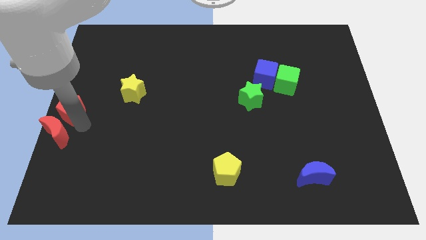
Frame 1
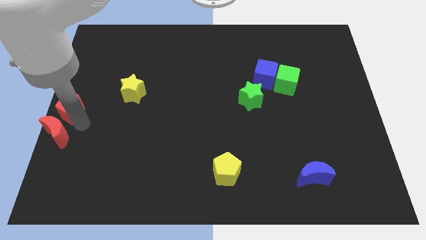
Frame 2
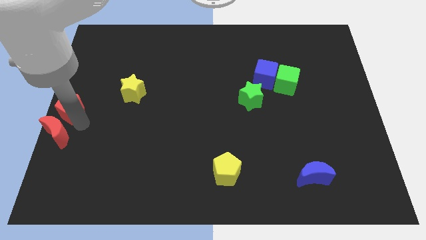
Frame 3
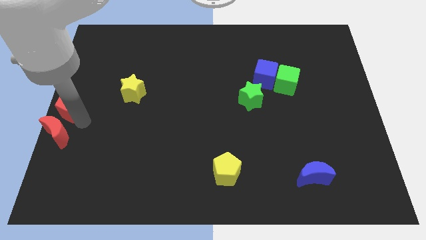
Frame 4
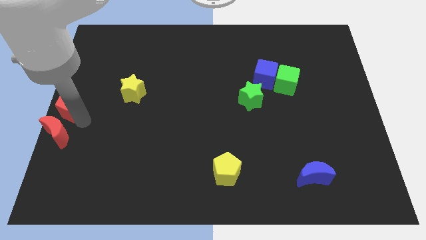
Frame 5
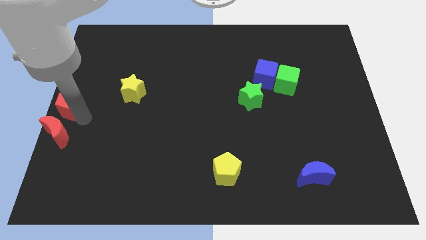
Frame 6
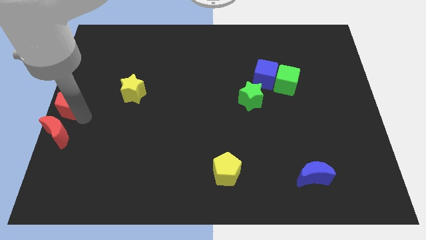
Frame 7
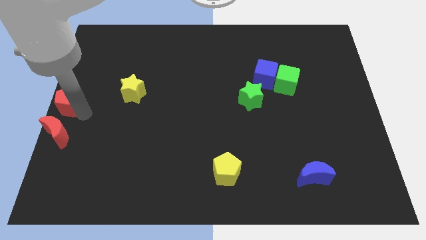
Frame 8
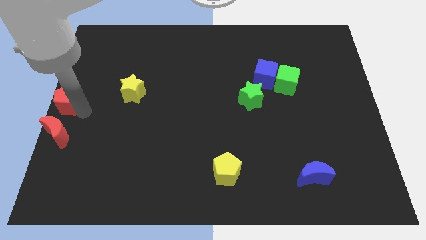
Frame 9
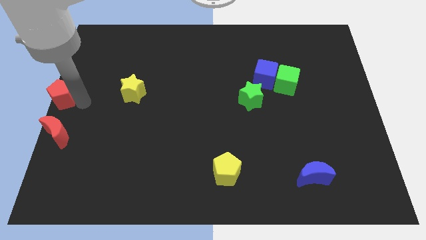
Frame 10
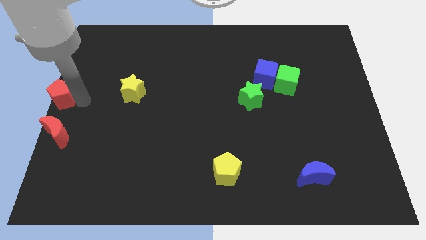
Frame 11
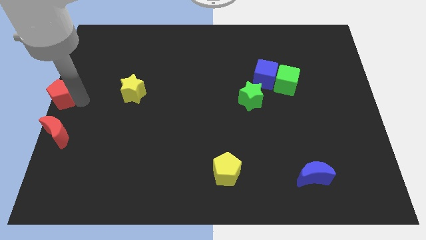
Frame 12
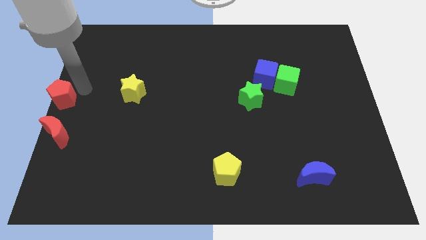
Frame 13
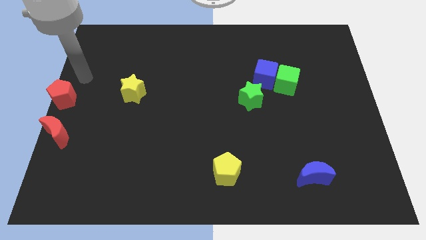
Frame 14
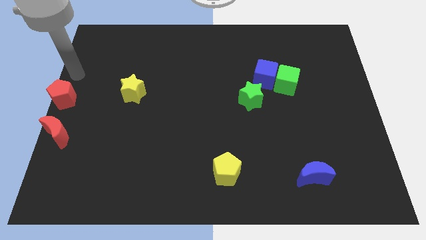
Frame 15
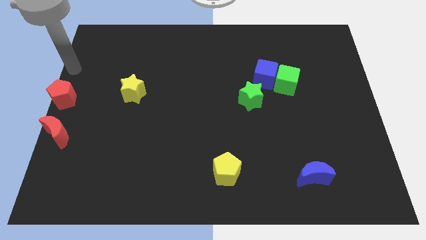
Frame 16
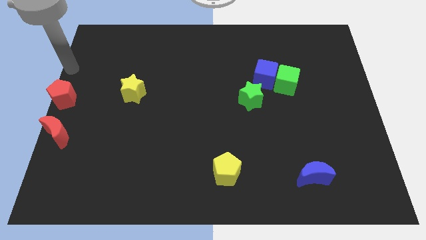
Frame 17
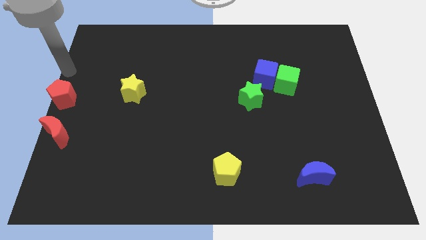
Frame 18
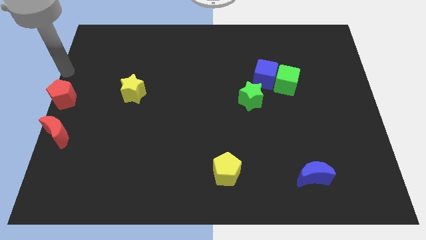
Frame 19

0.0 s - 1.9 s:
move the red pentagon to the left center of the board

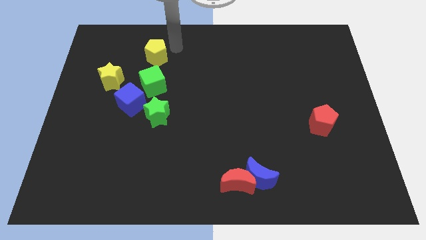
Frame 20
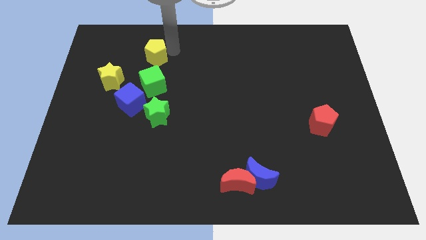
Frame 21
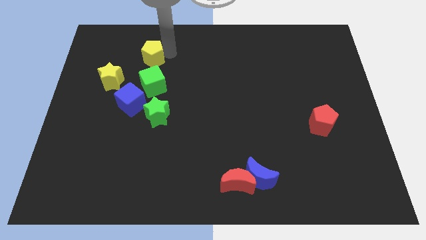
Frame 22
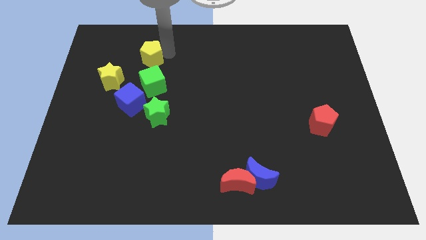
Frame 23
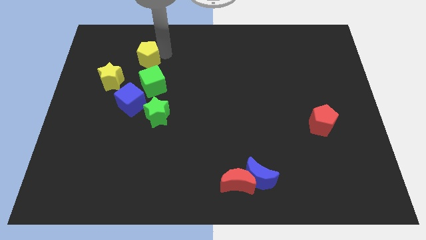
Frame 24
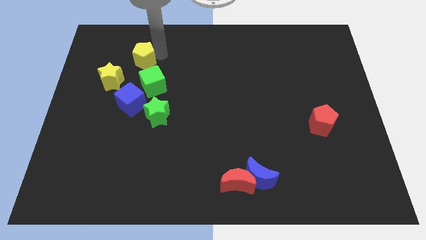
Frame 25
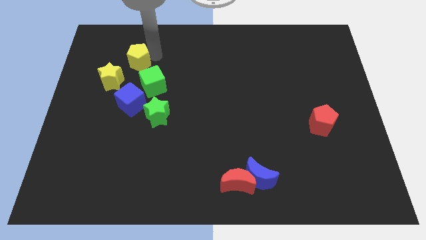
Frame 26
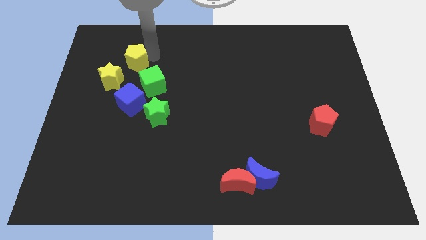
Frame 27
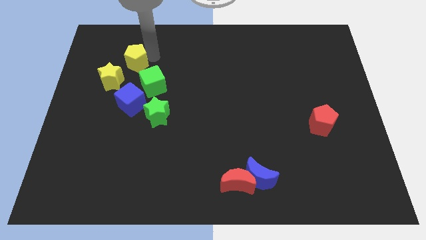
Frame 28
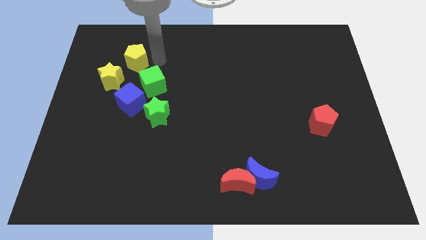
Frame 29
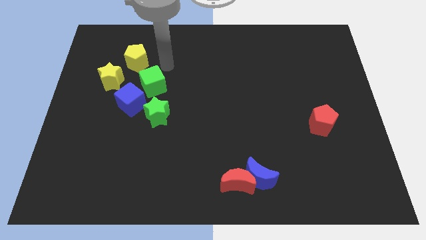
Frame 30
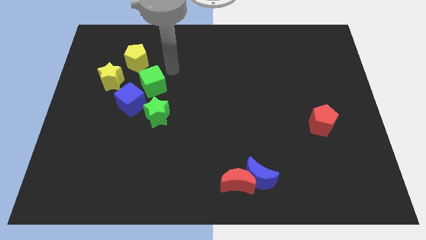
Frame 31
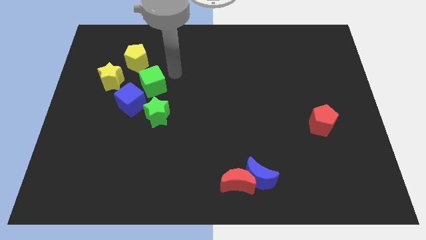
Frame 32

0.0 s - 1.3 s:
place the yellow pentagon above the green cube

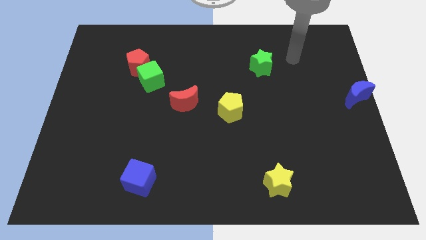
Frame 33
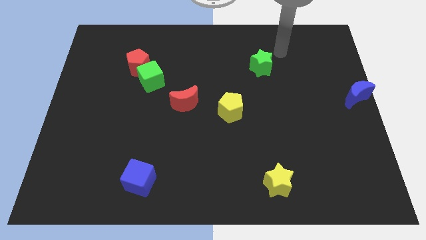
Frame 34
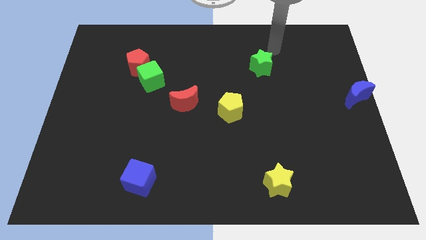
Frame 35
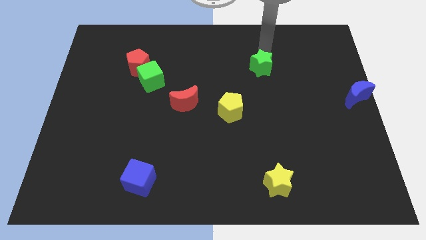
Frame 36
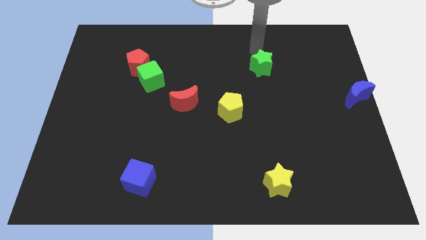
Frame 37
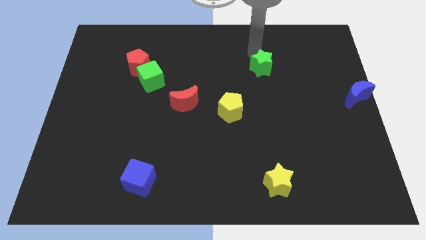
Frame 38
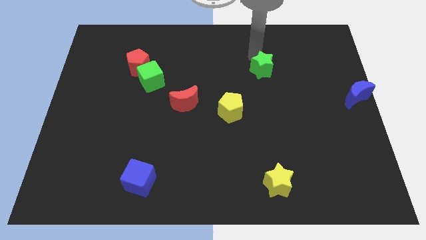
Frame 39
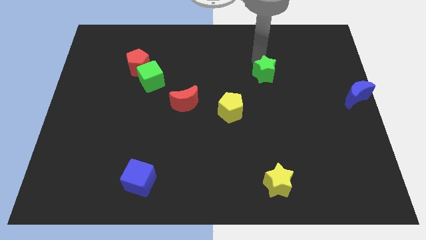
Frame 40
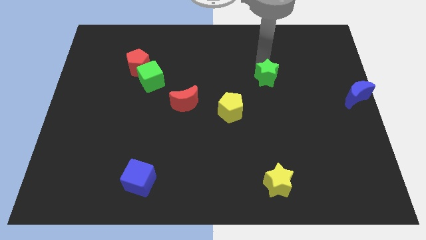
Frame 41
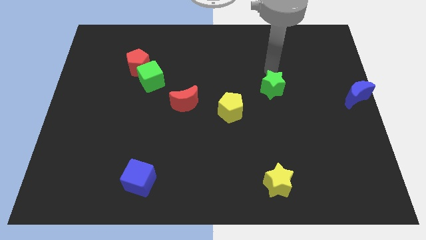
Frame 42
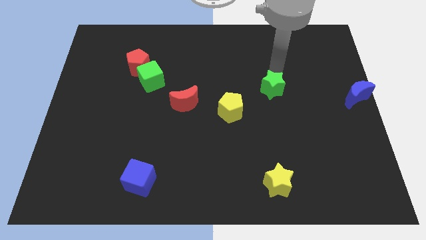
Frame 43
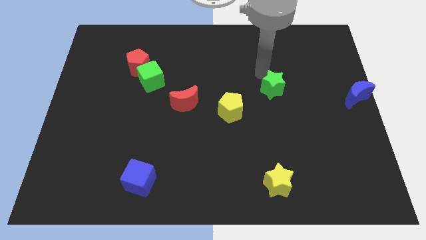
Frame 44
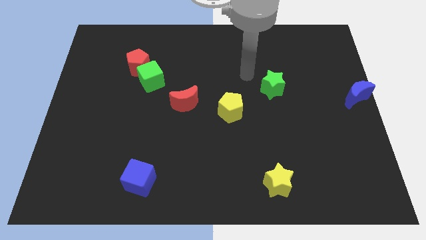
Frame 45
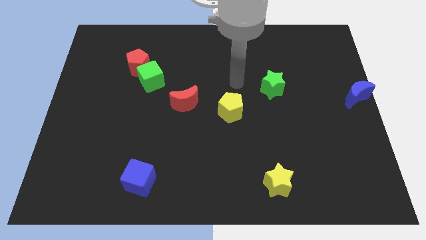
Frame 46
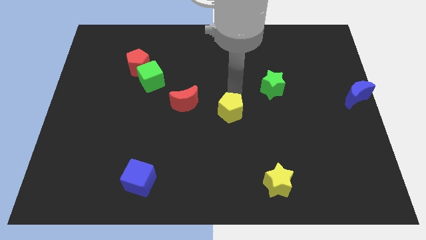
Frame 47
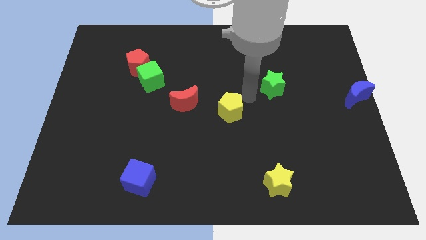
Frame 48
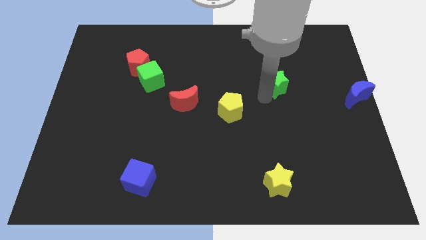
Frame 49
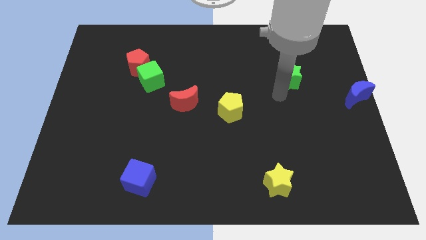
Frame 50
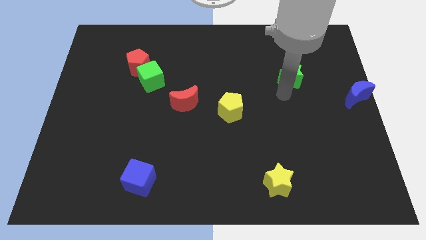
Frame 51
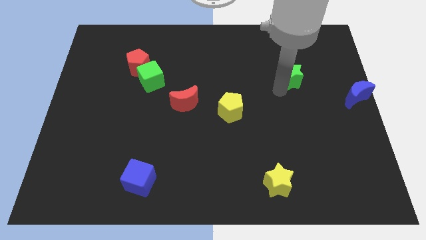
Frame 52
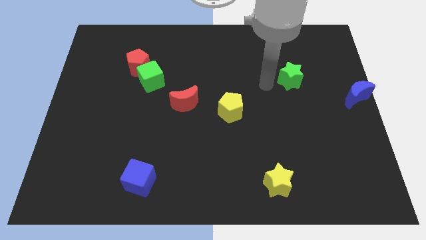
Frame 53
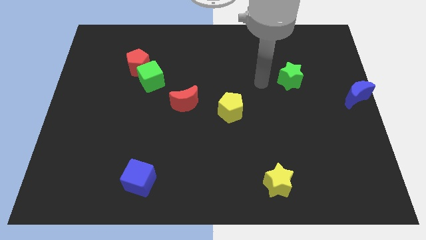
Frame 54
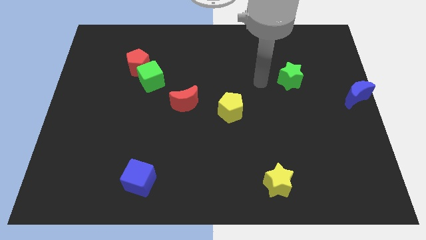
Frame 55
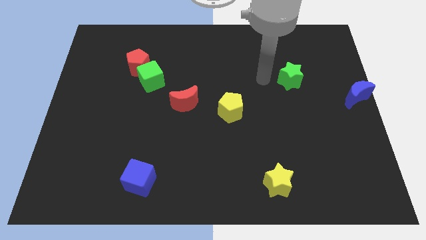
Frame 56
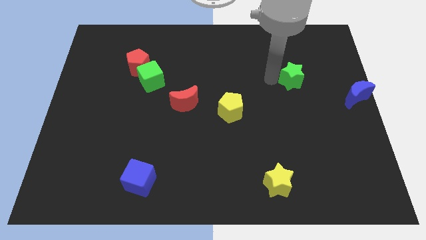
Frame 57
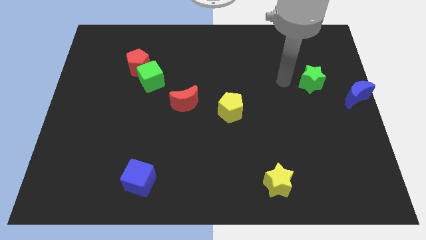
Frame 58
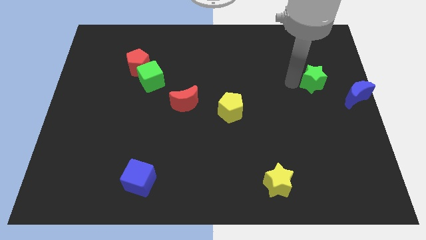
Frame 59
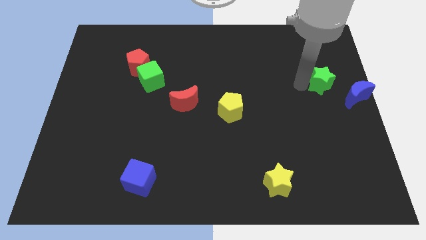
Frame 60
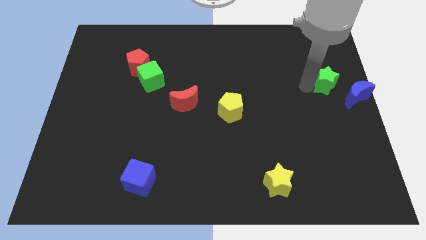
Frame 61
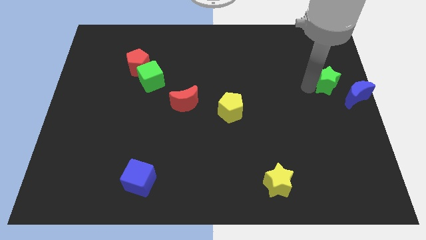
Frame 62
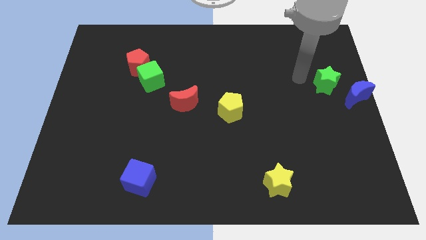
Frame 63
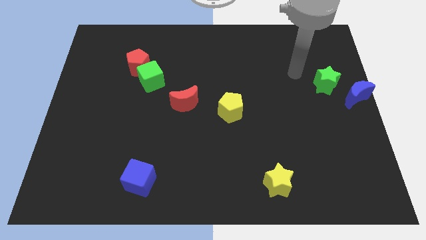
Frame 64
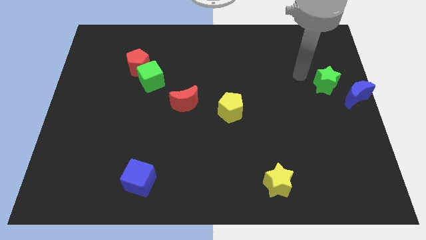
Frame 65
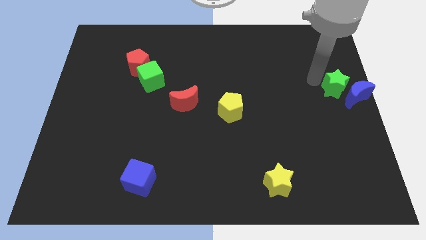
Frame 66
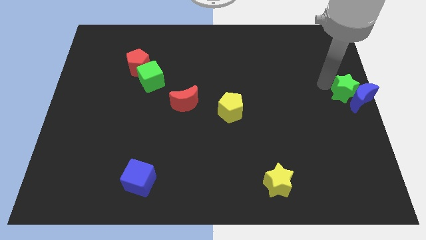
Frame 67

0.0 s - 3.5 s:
move green star into blue moon

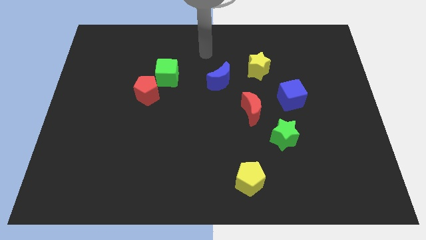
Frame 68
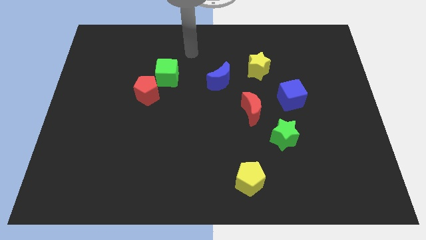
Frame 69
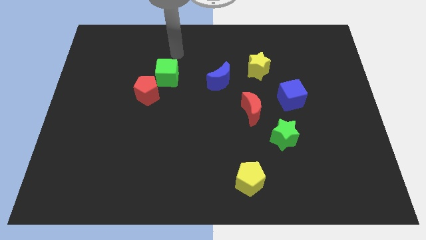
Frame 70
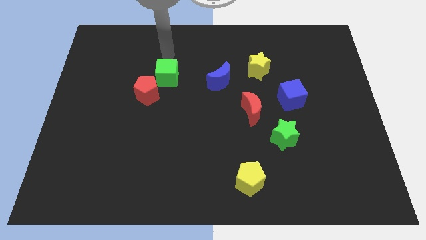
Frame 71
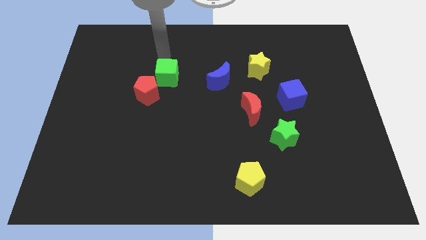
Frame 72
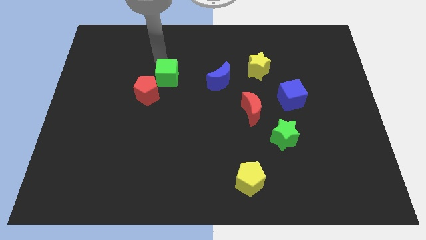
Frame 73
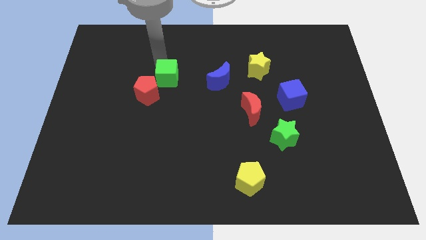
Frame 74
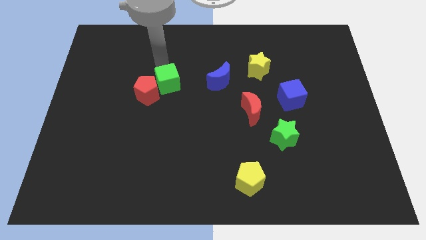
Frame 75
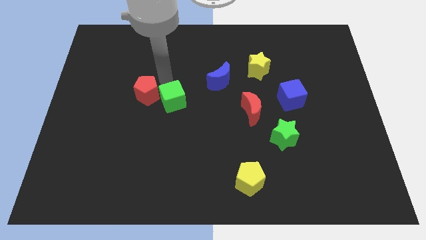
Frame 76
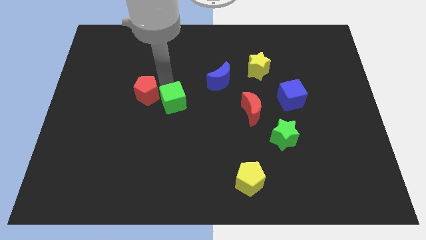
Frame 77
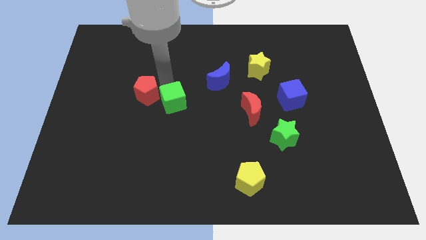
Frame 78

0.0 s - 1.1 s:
place green cube to the bottom right of the red pentagon

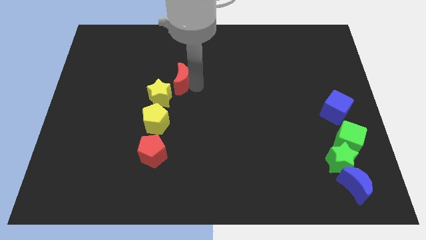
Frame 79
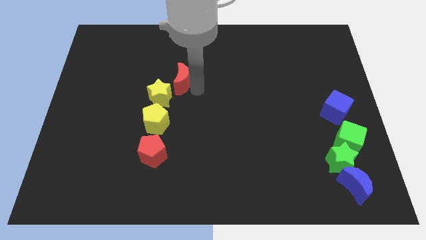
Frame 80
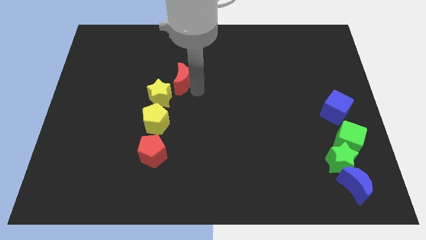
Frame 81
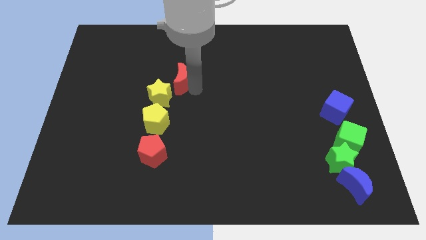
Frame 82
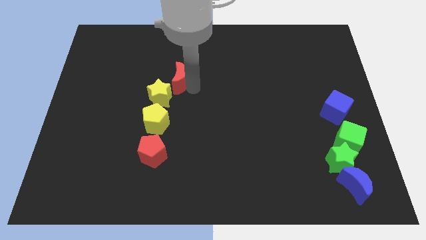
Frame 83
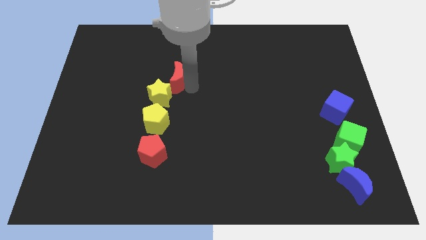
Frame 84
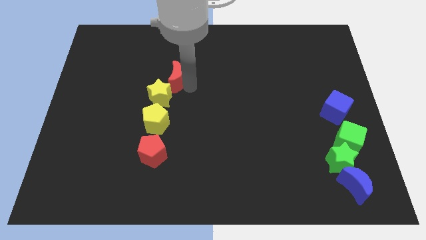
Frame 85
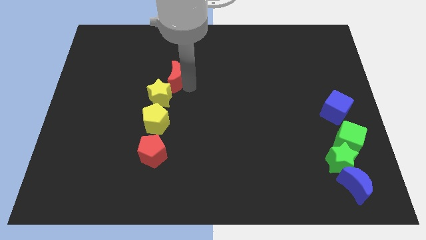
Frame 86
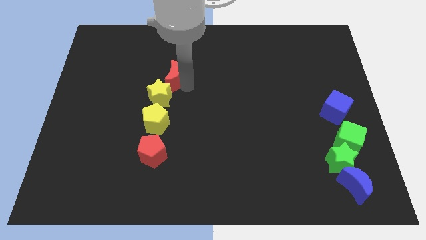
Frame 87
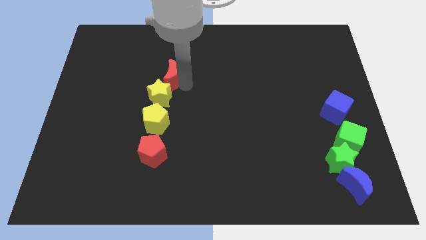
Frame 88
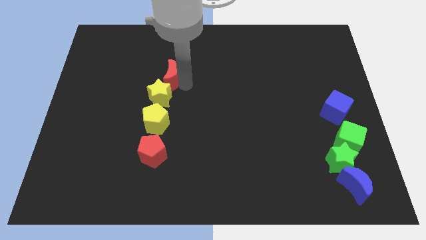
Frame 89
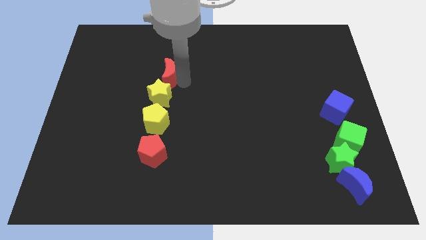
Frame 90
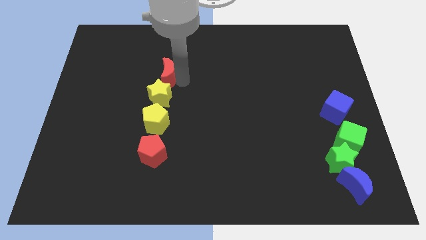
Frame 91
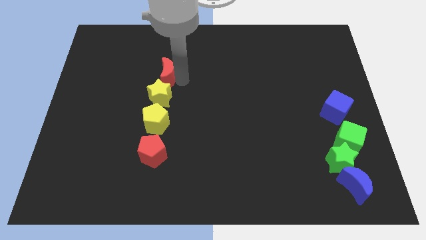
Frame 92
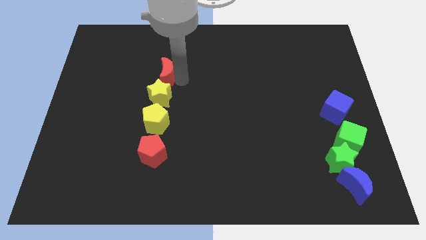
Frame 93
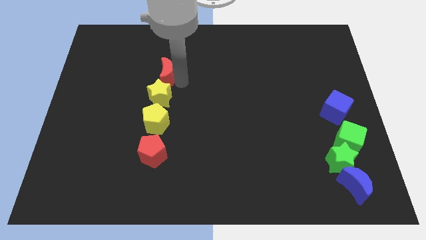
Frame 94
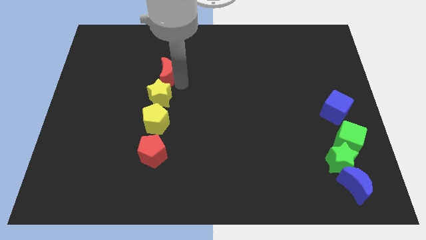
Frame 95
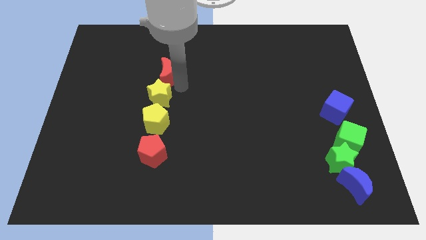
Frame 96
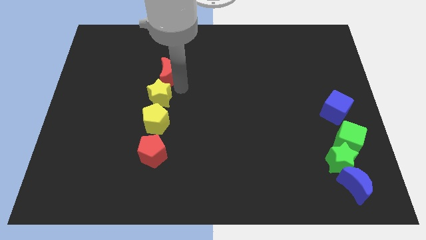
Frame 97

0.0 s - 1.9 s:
place the red crescent vertically above the yellow star
